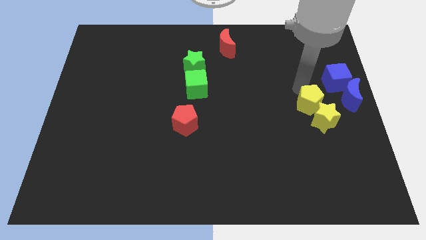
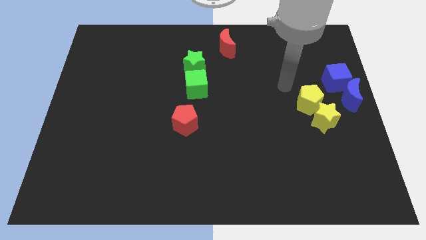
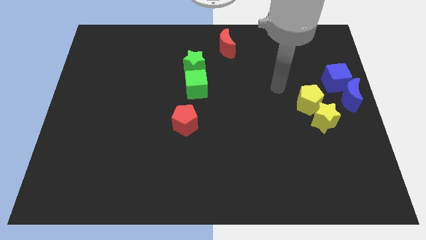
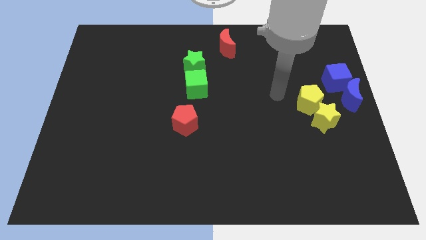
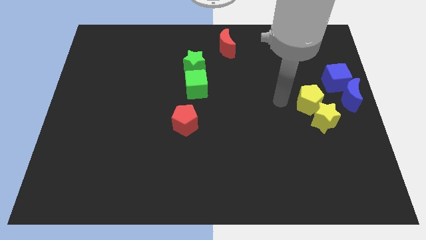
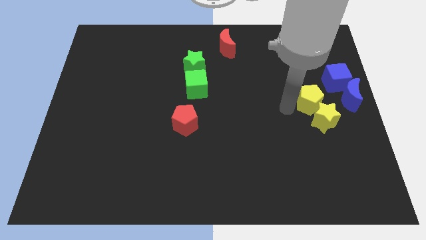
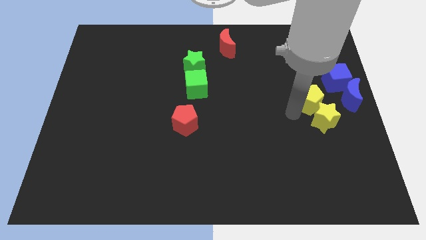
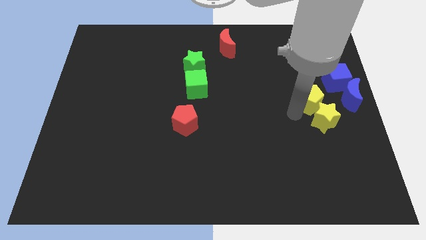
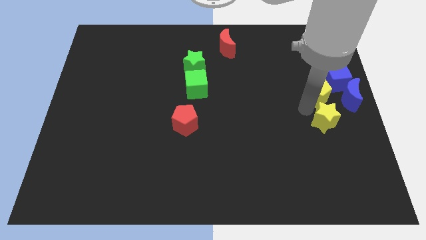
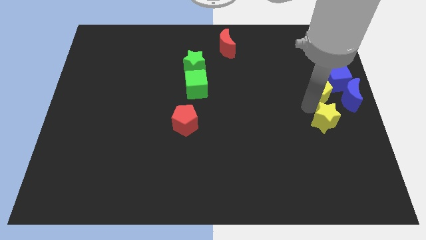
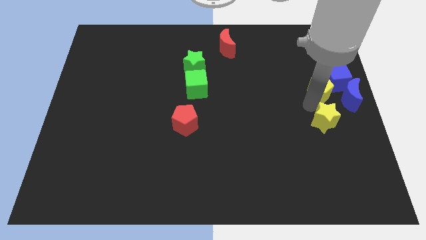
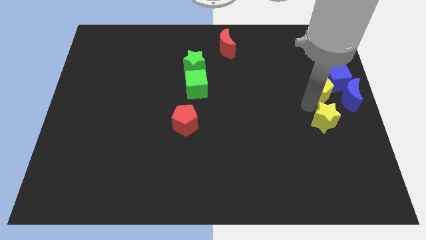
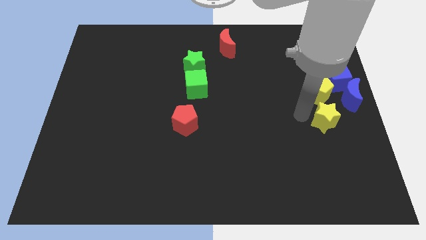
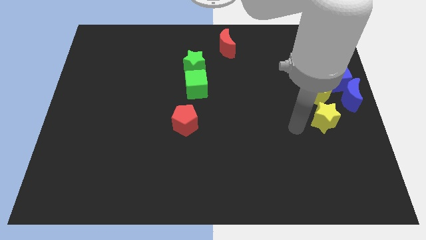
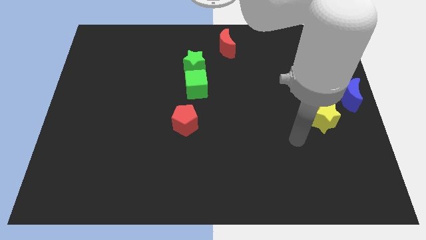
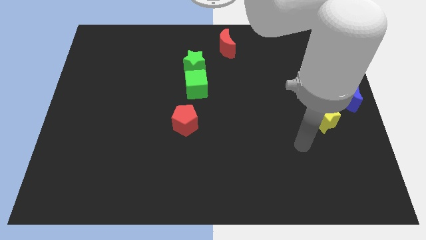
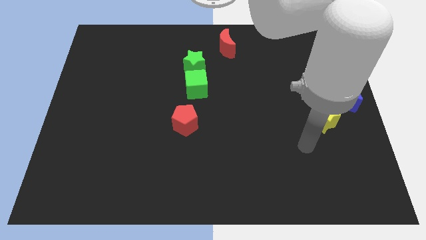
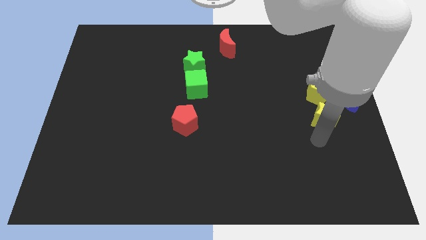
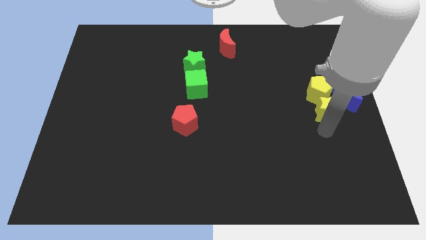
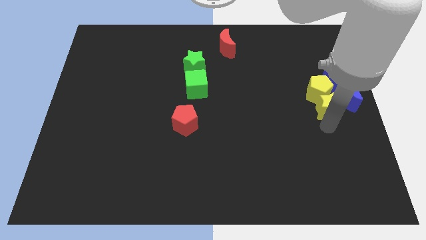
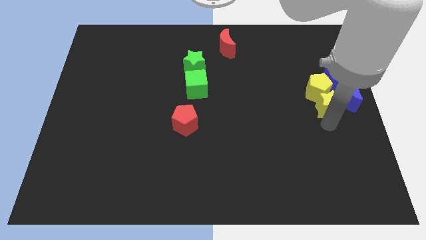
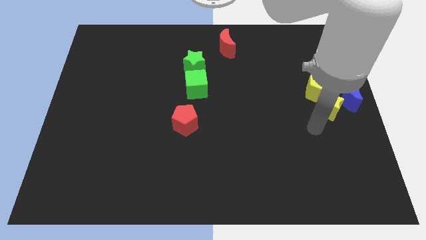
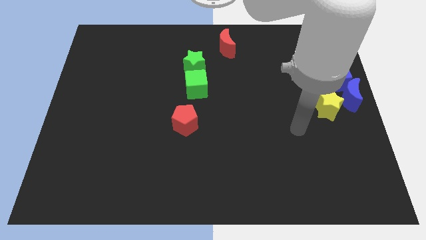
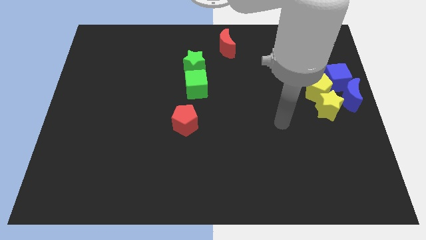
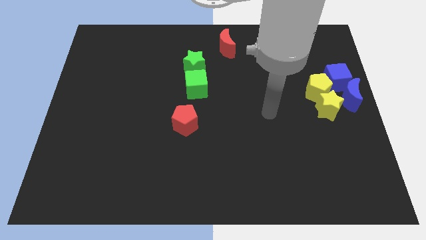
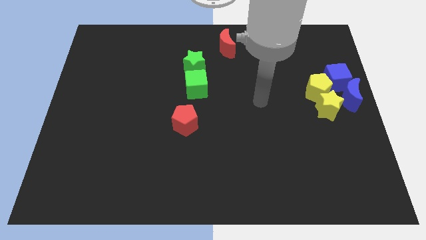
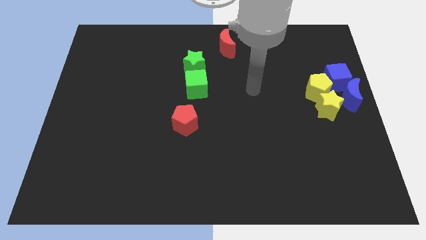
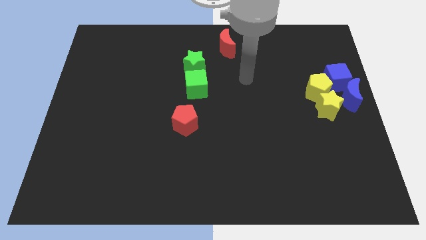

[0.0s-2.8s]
move the yellow pentagon and star into the blue cube and blue crescent from left side

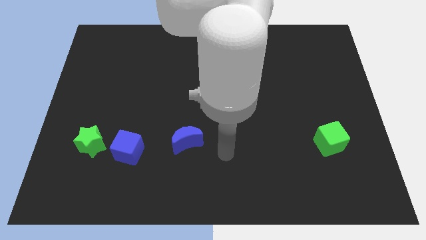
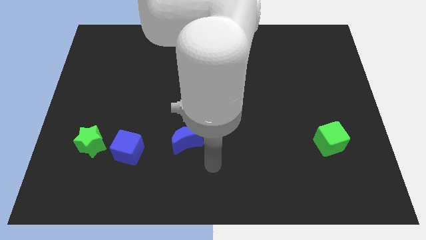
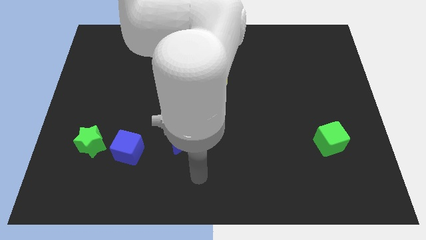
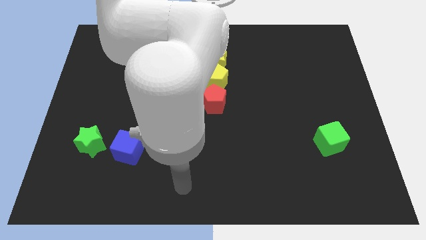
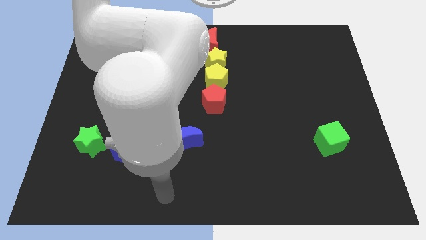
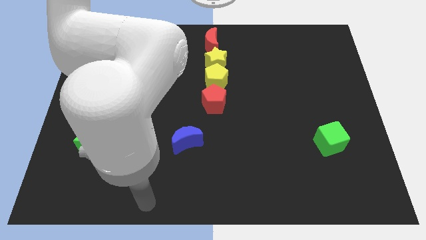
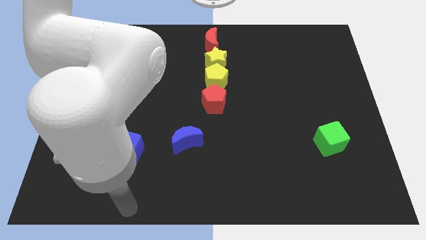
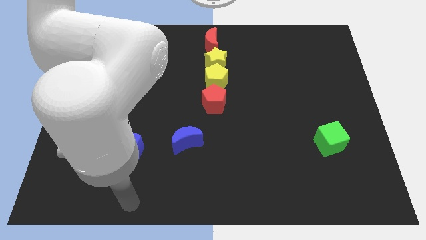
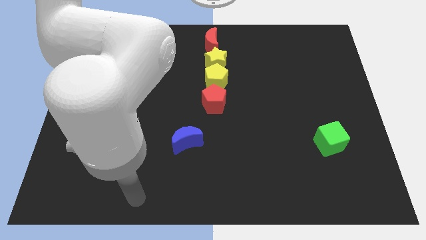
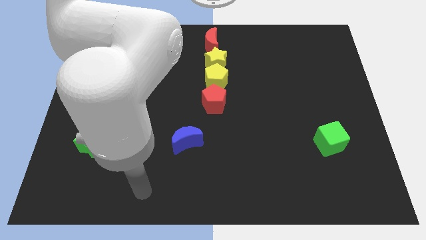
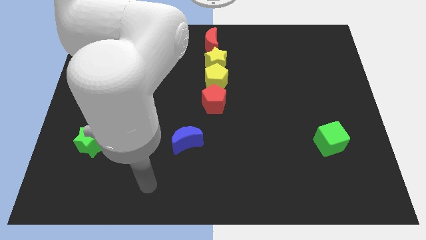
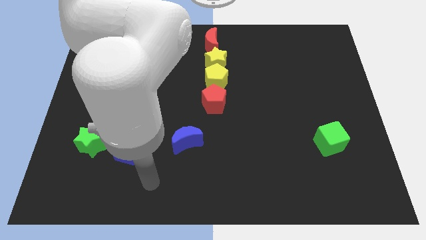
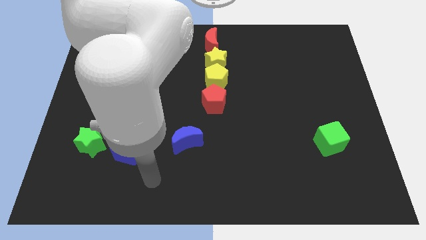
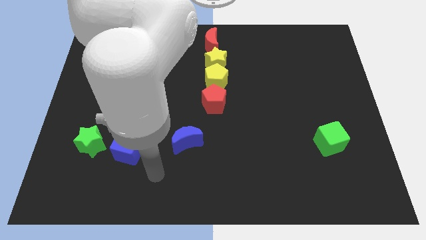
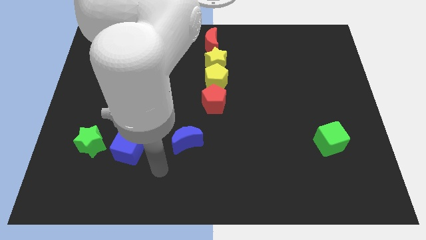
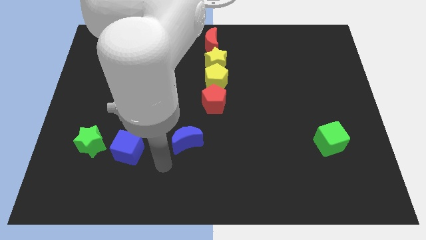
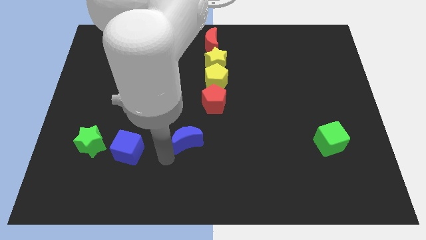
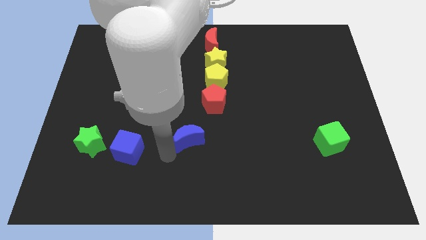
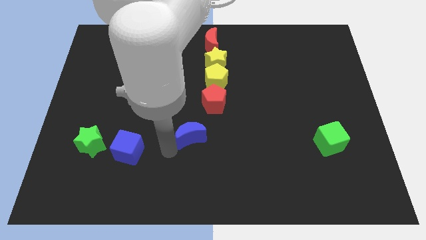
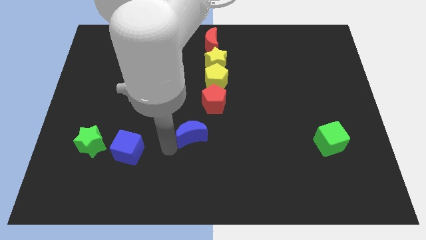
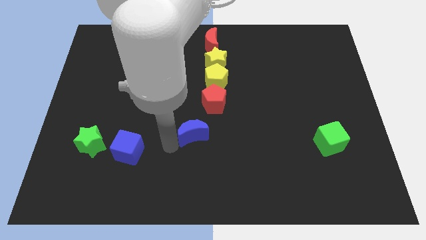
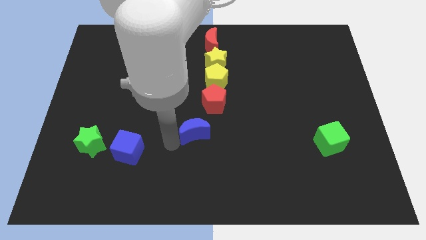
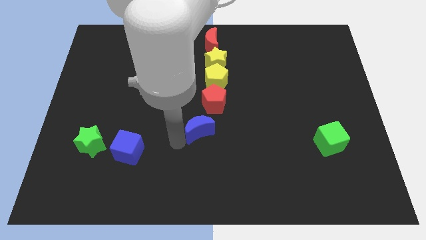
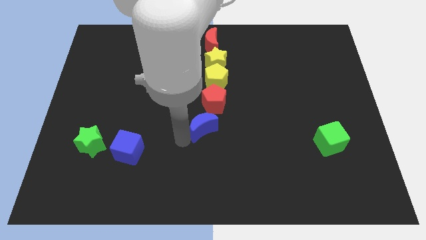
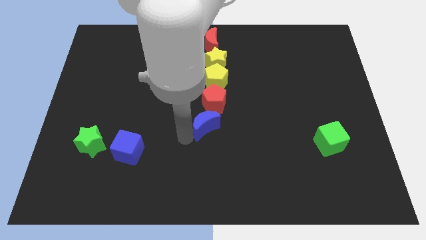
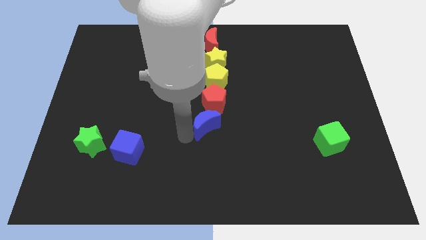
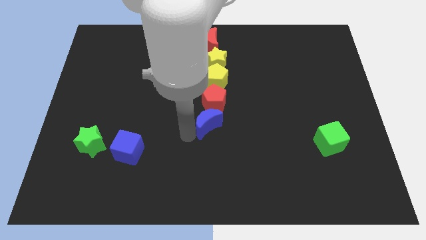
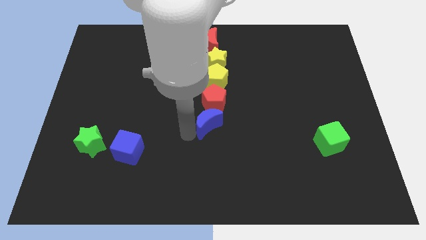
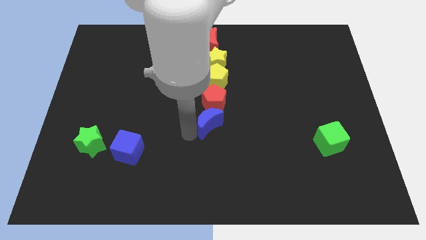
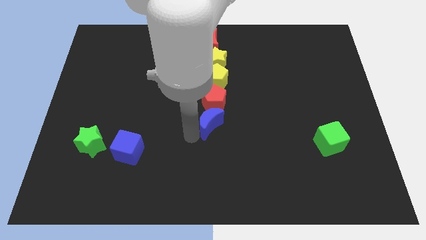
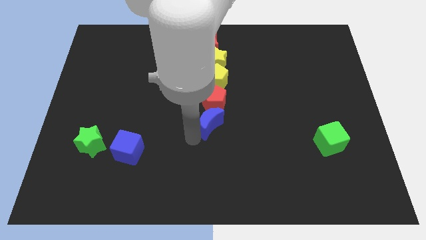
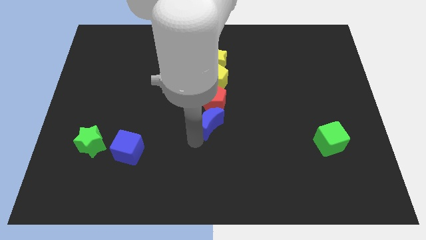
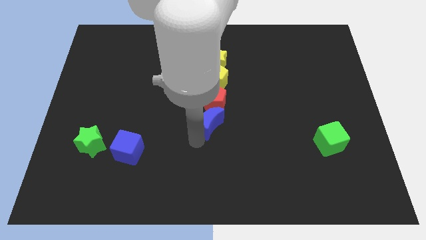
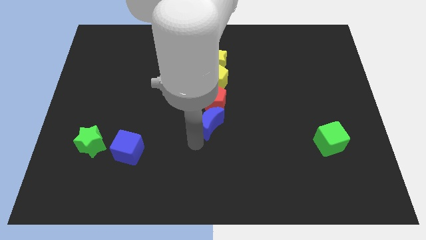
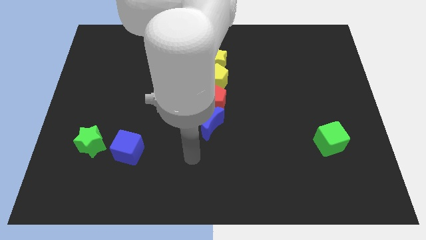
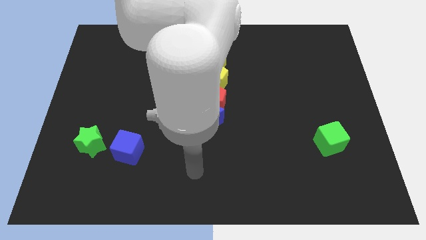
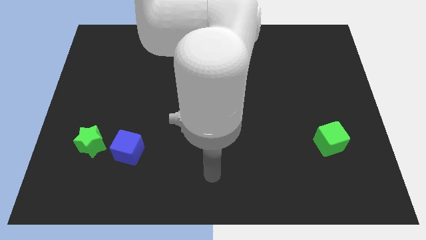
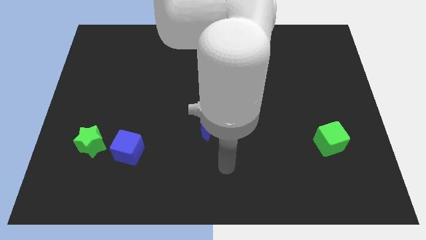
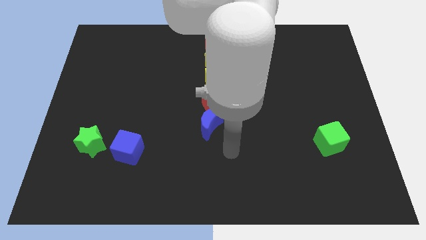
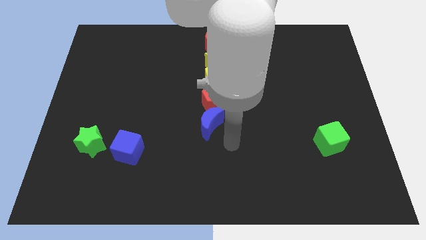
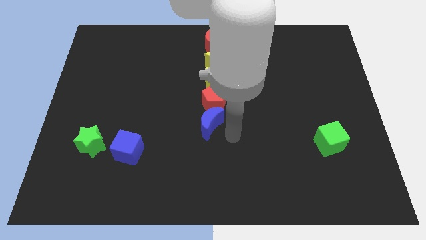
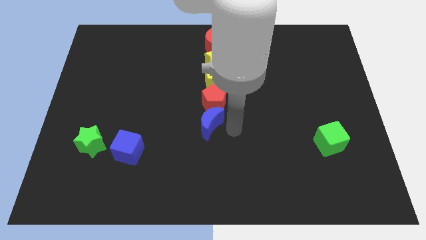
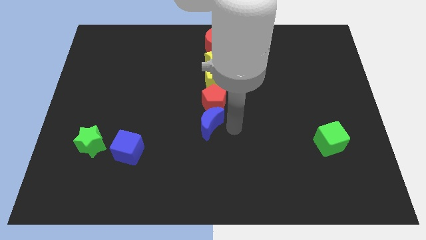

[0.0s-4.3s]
push the blue moon to the bottom side of the red pentagon

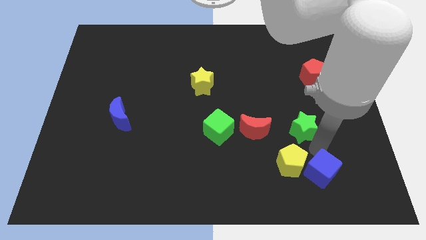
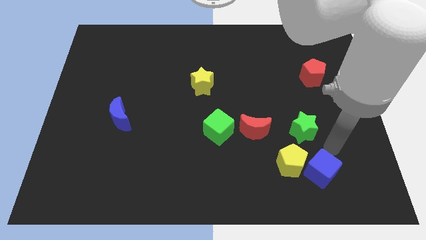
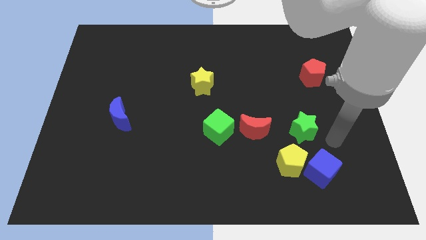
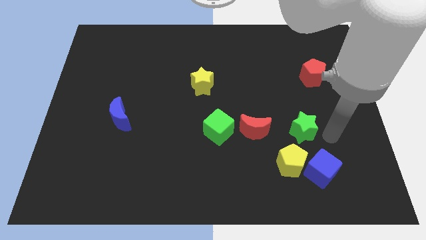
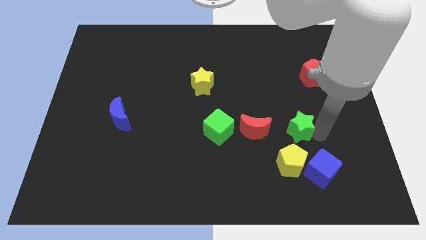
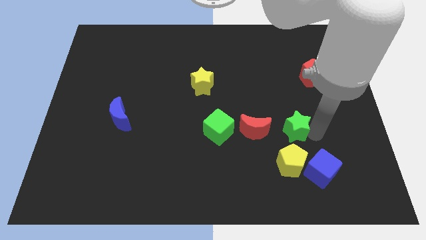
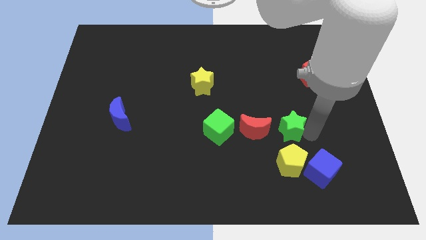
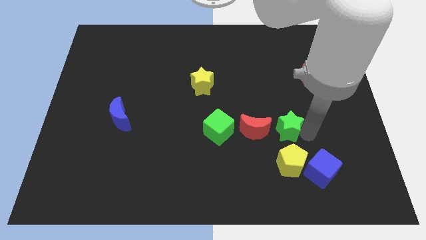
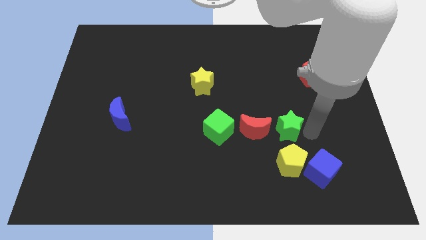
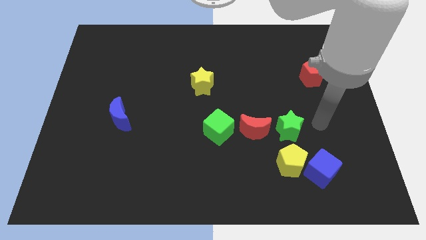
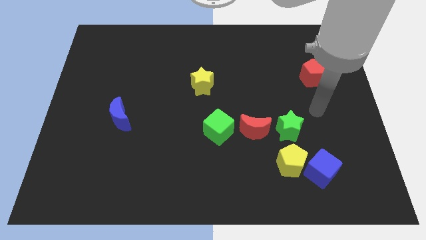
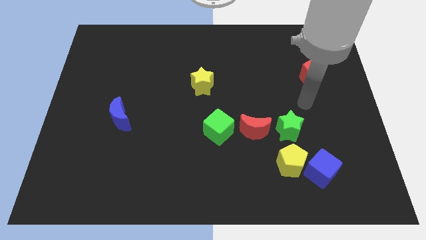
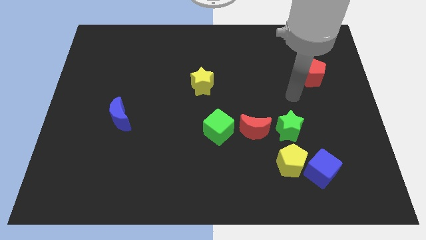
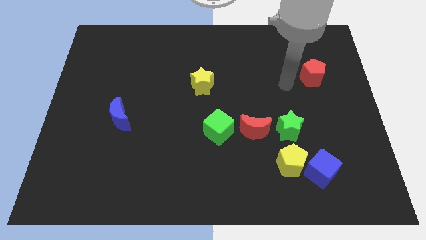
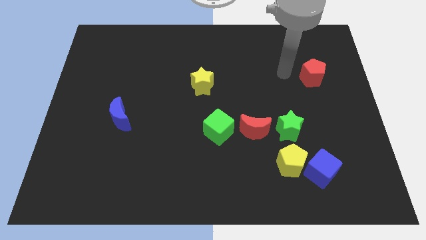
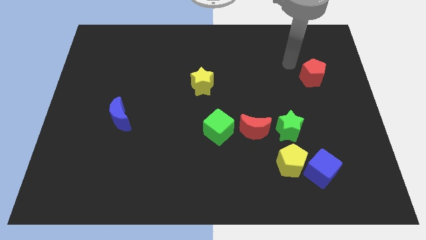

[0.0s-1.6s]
push the green star close to the red moon

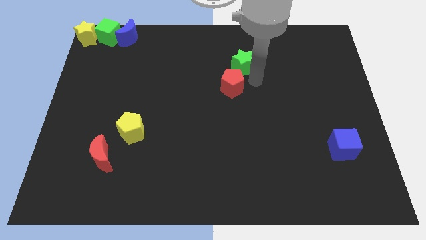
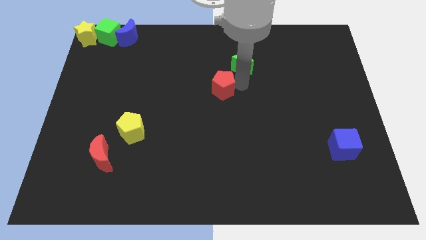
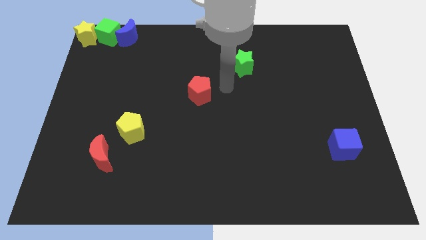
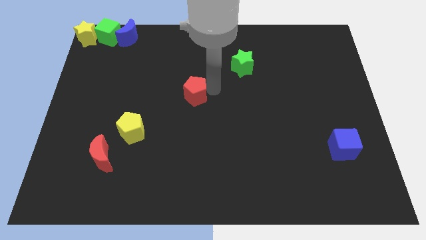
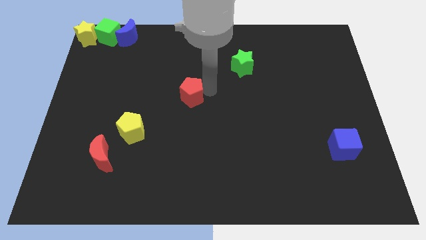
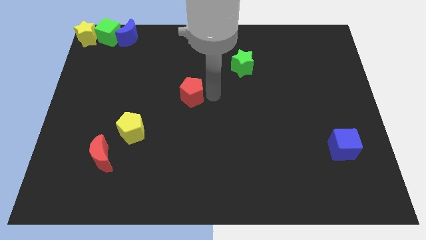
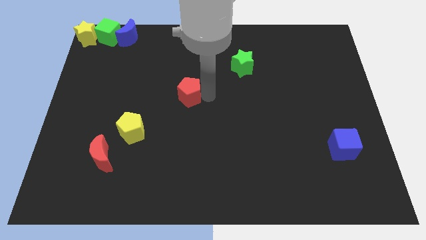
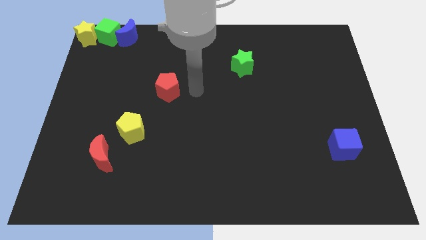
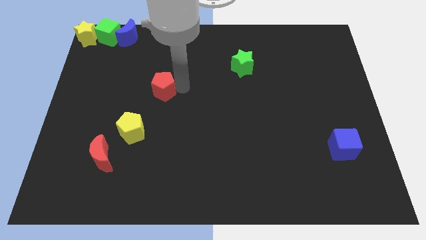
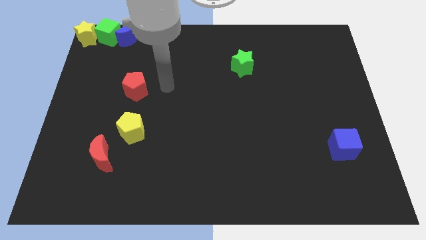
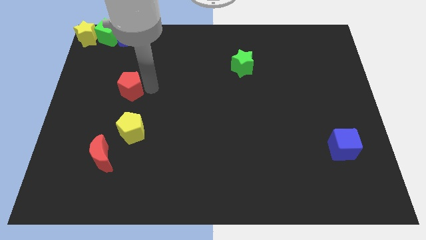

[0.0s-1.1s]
put the red pentagon vertically above the yellow pentagon
